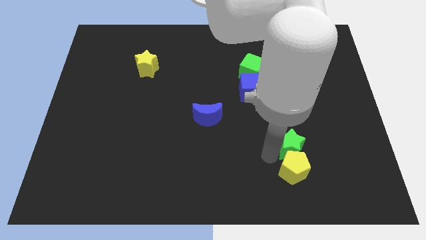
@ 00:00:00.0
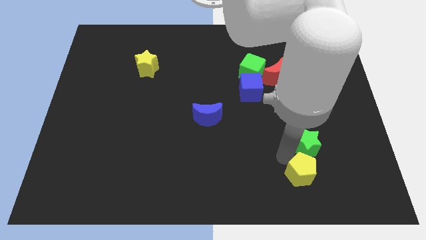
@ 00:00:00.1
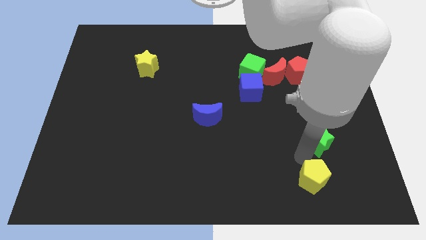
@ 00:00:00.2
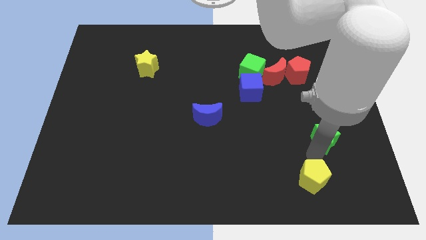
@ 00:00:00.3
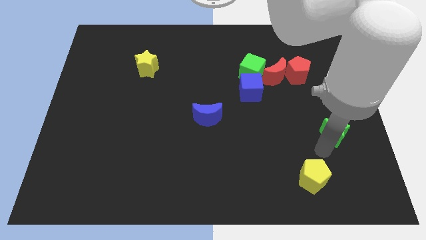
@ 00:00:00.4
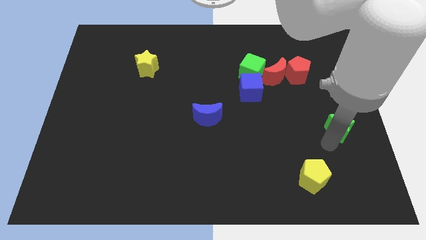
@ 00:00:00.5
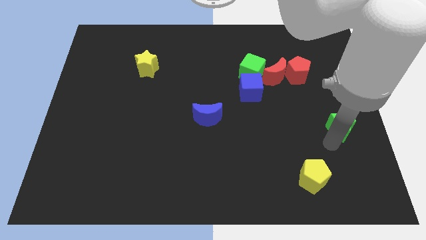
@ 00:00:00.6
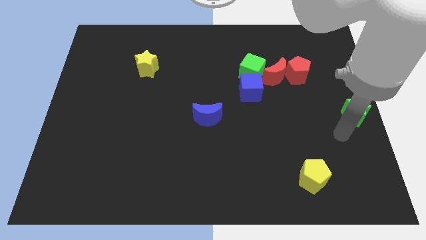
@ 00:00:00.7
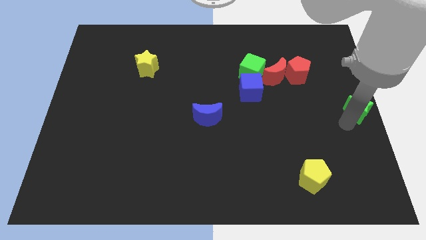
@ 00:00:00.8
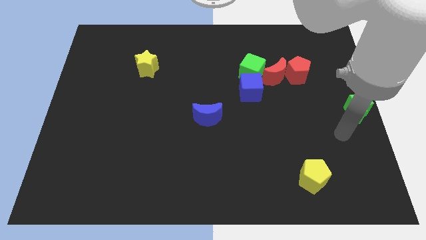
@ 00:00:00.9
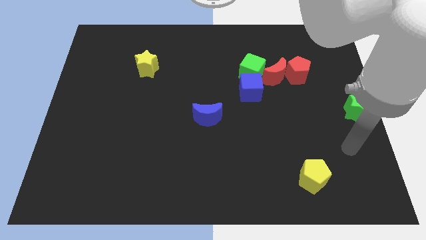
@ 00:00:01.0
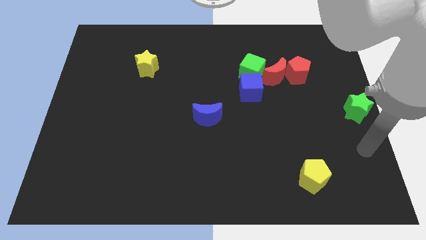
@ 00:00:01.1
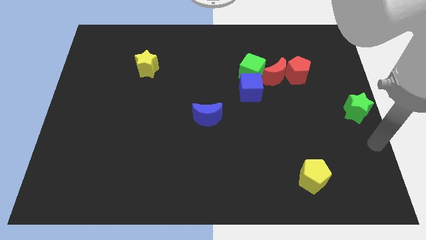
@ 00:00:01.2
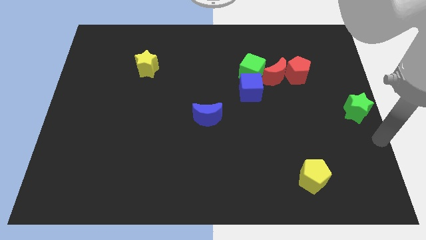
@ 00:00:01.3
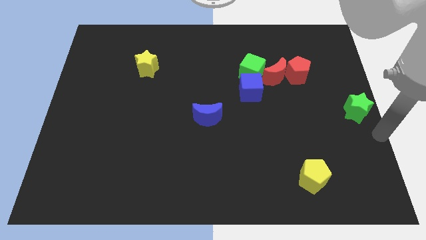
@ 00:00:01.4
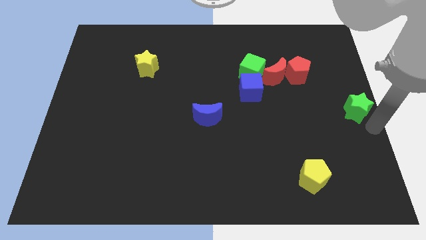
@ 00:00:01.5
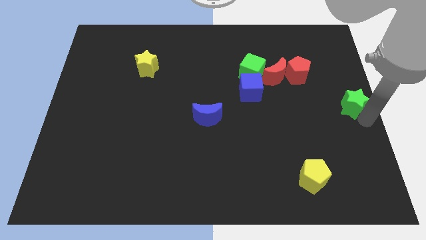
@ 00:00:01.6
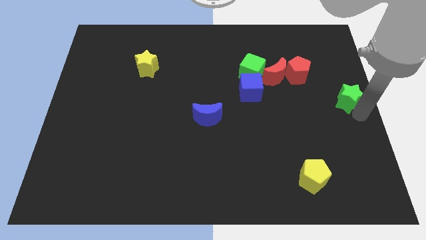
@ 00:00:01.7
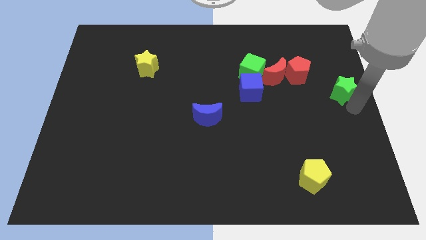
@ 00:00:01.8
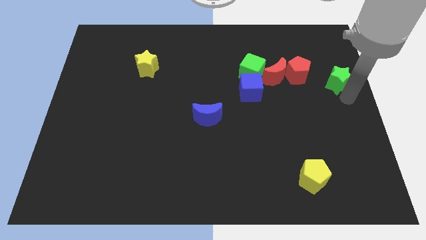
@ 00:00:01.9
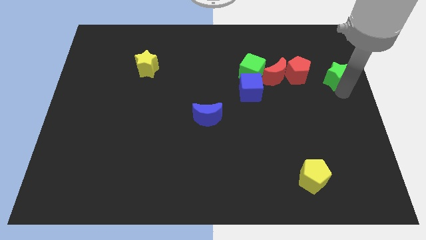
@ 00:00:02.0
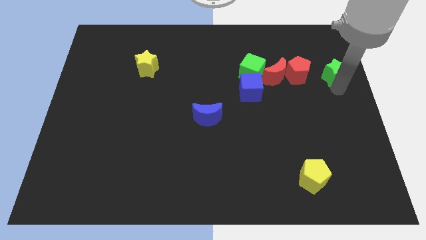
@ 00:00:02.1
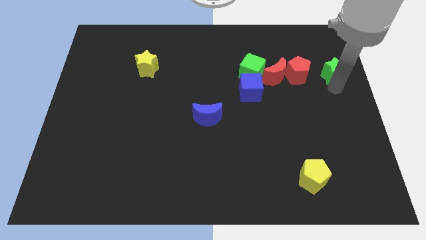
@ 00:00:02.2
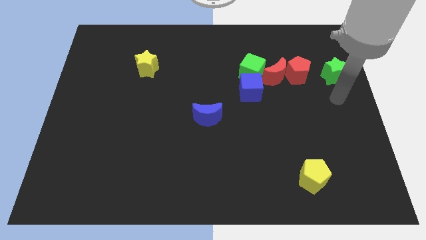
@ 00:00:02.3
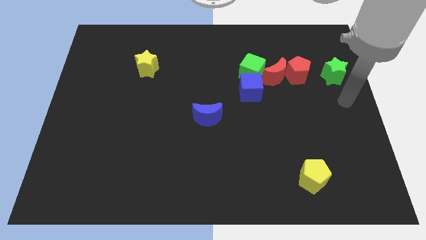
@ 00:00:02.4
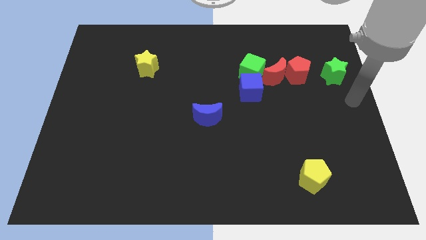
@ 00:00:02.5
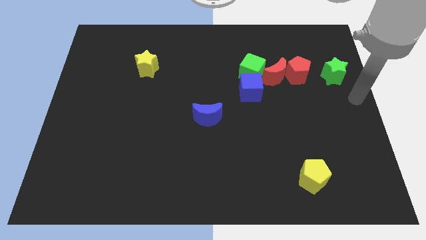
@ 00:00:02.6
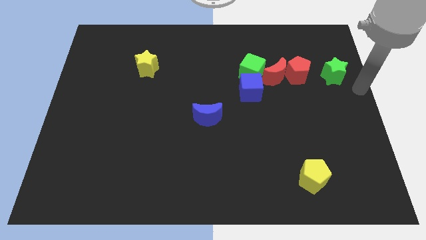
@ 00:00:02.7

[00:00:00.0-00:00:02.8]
move the green star right to the red pentagon

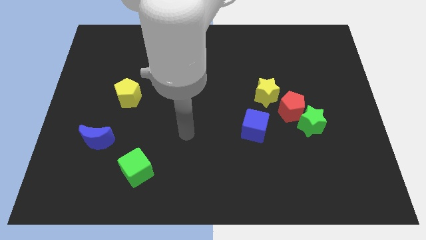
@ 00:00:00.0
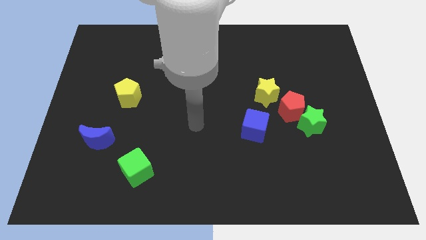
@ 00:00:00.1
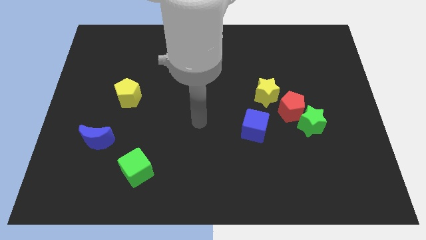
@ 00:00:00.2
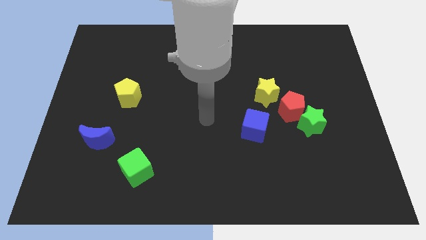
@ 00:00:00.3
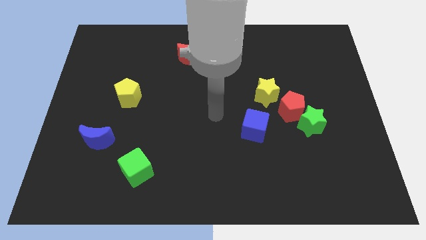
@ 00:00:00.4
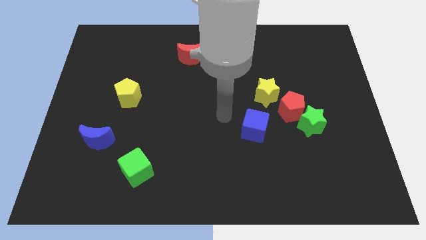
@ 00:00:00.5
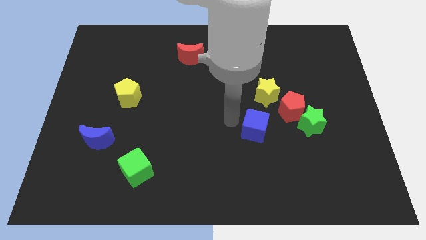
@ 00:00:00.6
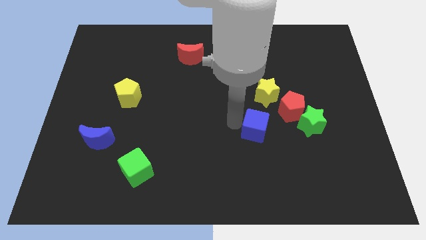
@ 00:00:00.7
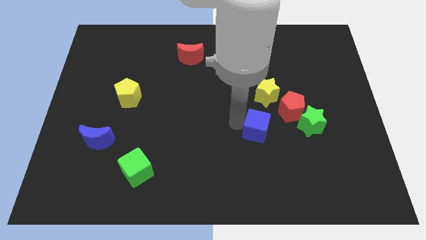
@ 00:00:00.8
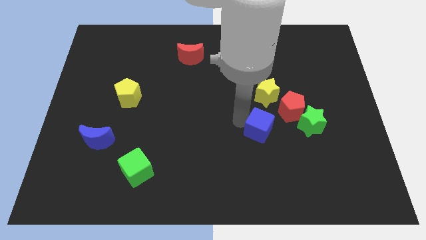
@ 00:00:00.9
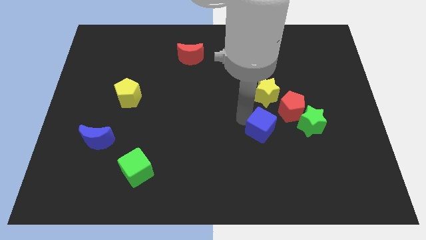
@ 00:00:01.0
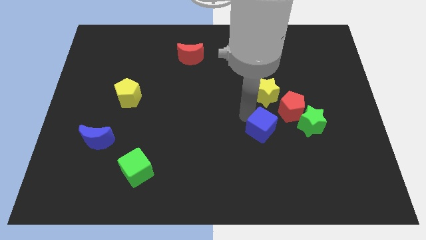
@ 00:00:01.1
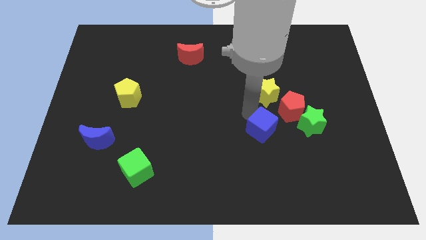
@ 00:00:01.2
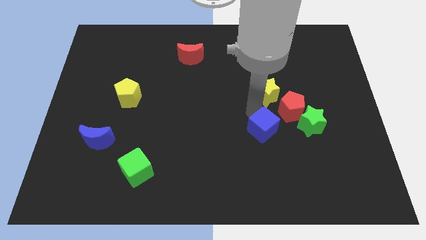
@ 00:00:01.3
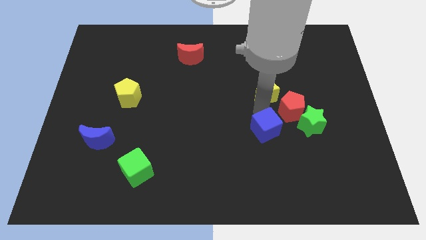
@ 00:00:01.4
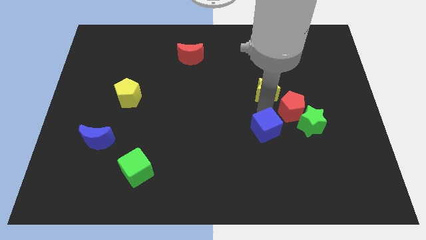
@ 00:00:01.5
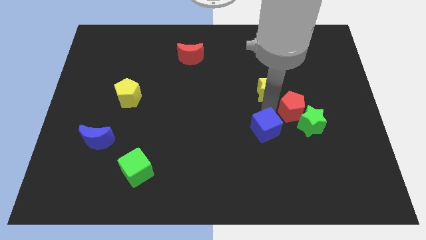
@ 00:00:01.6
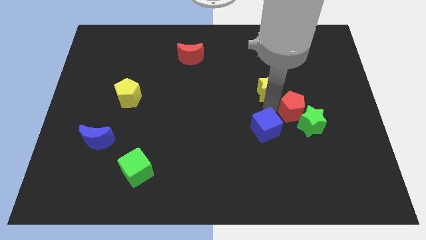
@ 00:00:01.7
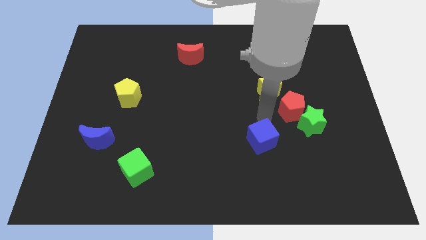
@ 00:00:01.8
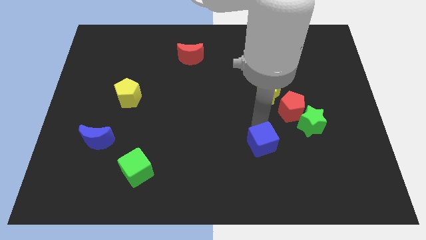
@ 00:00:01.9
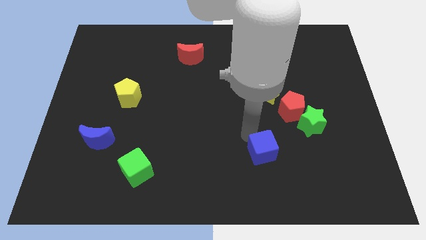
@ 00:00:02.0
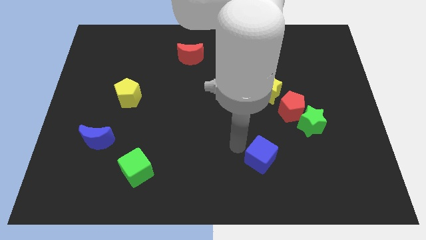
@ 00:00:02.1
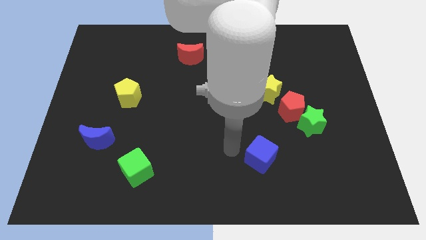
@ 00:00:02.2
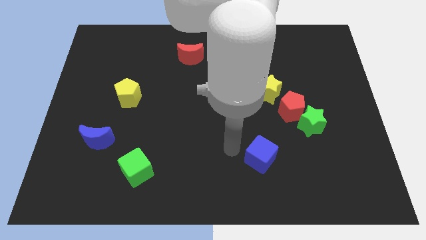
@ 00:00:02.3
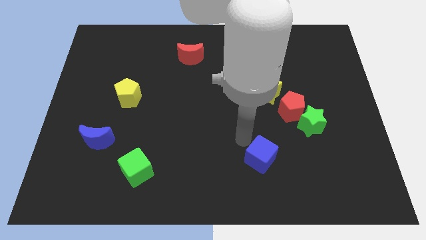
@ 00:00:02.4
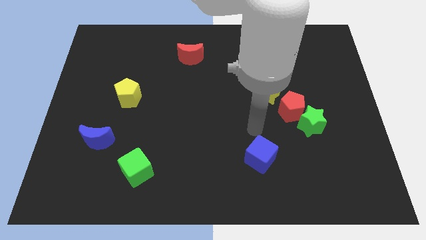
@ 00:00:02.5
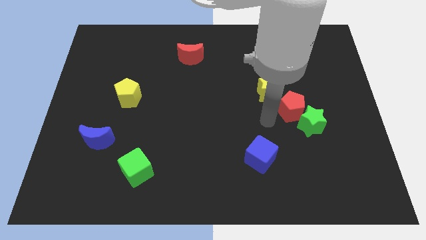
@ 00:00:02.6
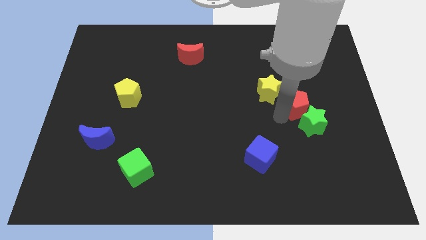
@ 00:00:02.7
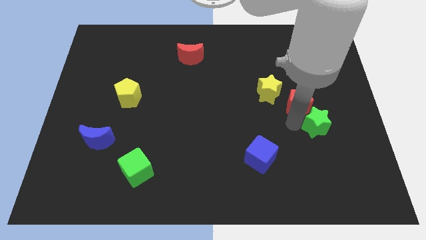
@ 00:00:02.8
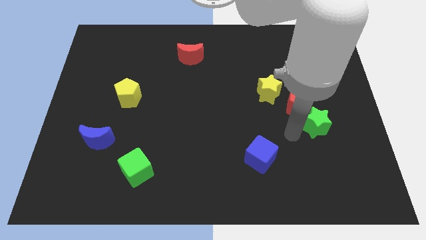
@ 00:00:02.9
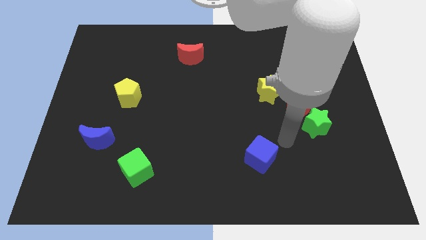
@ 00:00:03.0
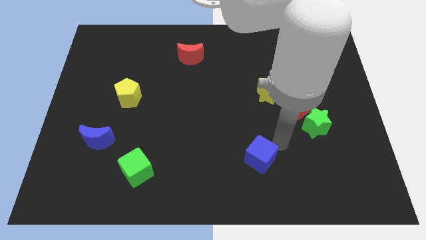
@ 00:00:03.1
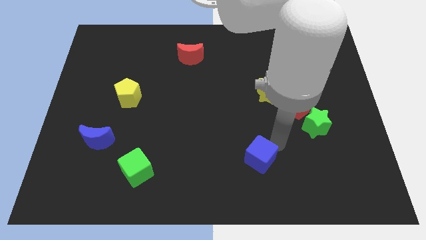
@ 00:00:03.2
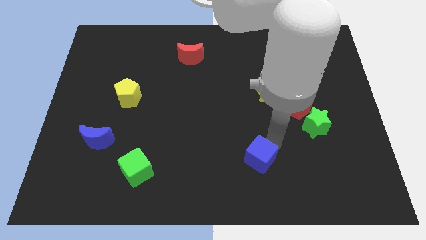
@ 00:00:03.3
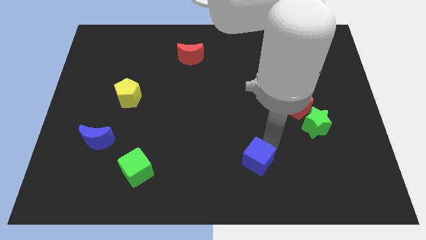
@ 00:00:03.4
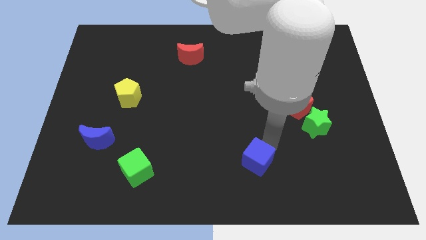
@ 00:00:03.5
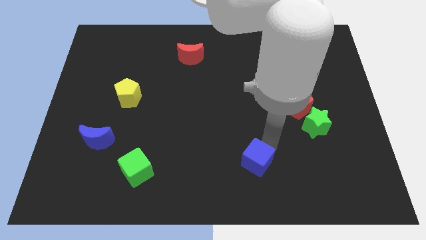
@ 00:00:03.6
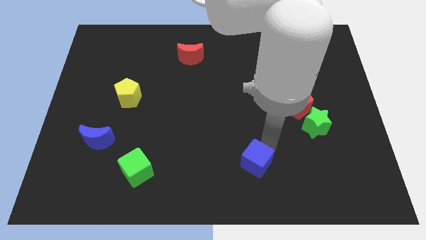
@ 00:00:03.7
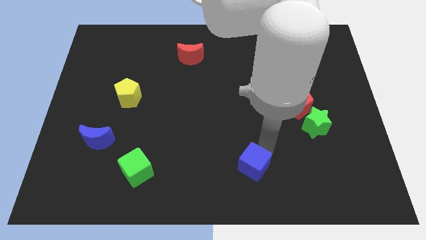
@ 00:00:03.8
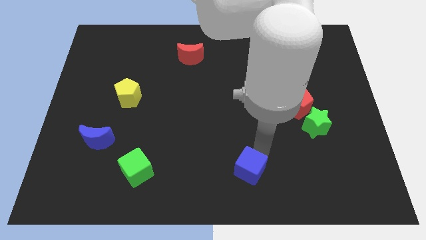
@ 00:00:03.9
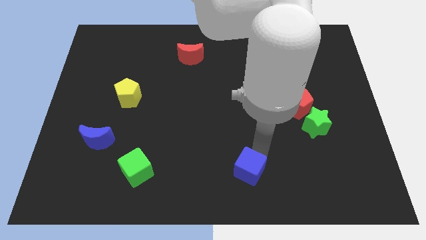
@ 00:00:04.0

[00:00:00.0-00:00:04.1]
move the blue cube to the bottom of the board

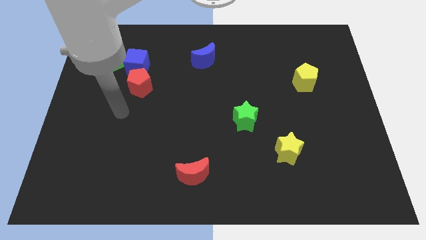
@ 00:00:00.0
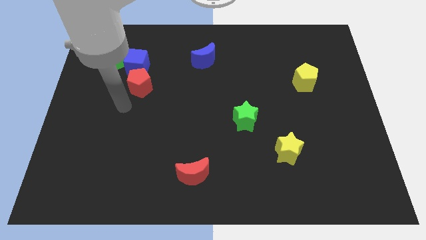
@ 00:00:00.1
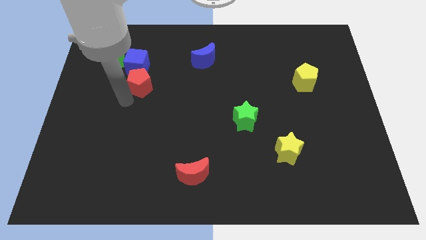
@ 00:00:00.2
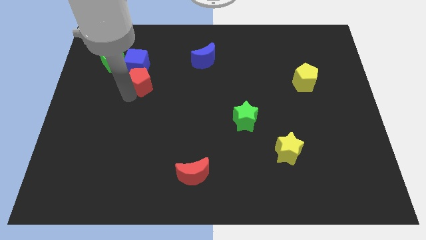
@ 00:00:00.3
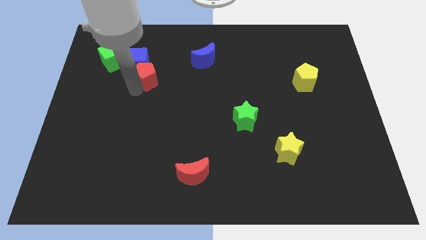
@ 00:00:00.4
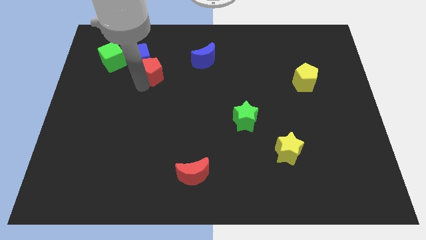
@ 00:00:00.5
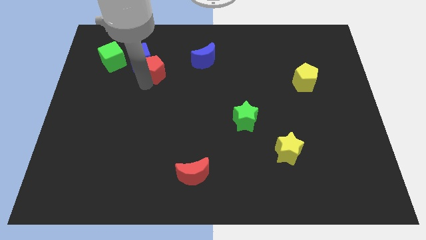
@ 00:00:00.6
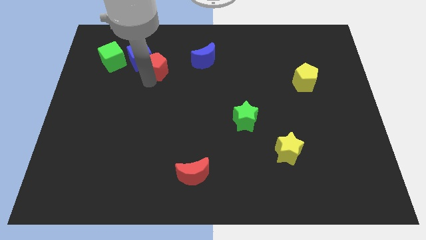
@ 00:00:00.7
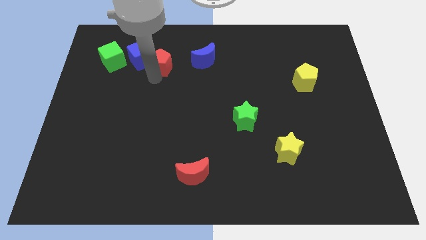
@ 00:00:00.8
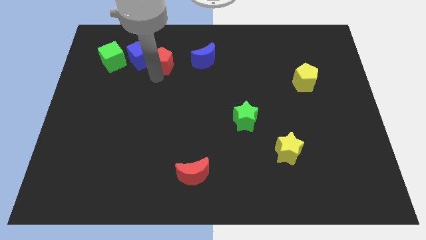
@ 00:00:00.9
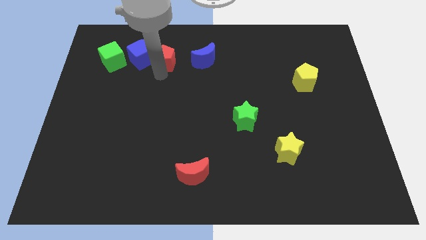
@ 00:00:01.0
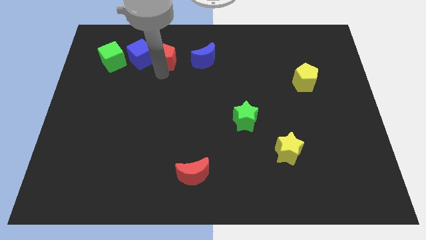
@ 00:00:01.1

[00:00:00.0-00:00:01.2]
push the red pentagon between blue blocks

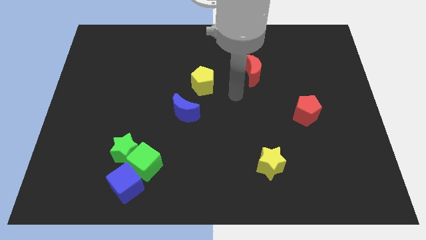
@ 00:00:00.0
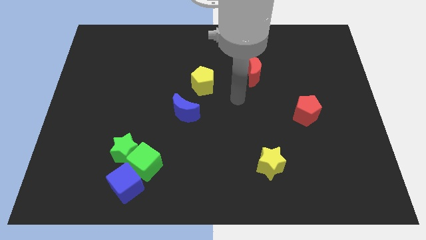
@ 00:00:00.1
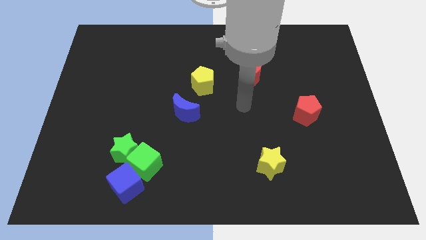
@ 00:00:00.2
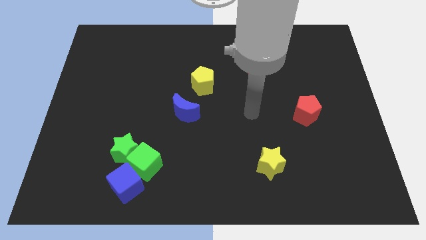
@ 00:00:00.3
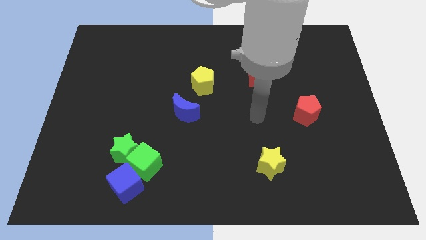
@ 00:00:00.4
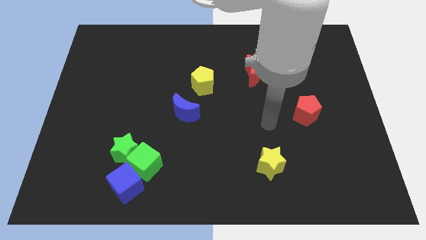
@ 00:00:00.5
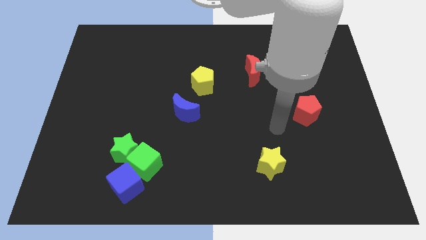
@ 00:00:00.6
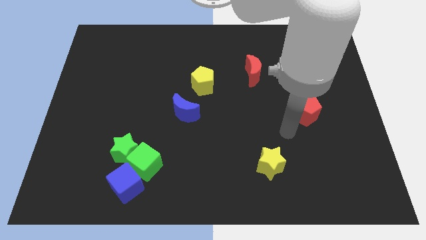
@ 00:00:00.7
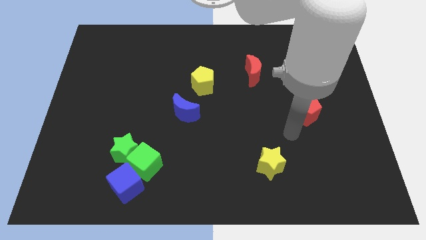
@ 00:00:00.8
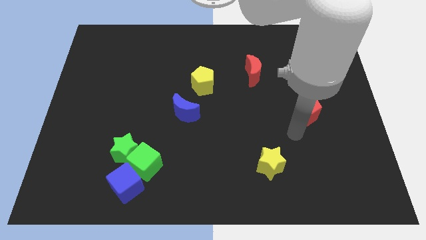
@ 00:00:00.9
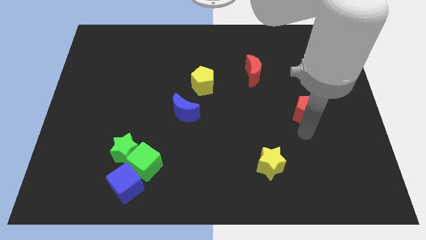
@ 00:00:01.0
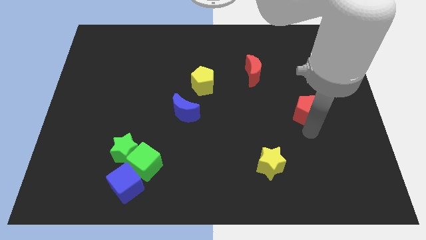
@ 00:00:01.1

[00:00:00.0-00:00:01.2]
place the arm below the red pentagon
